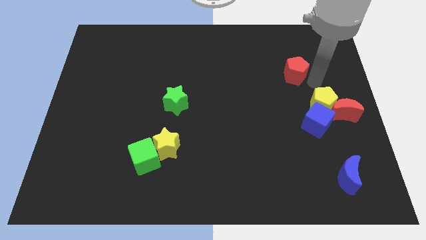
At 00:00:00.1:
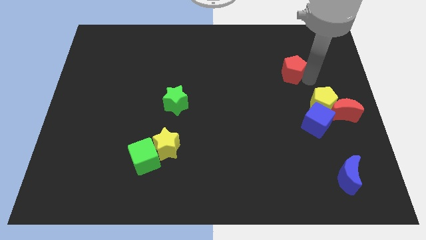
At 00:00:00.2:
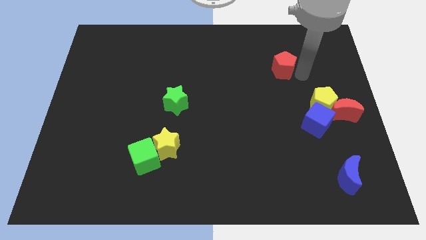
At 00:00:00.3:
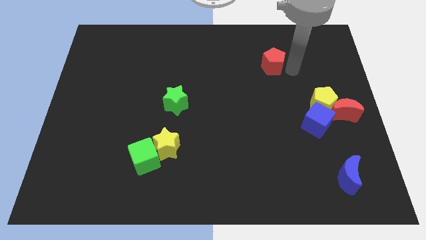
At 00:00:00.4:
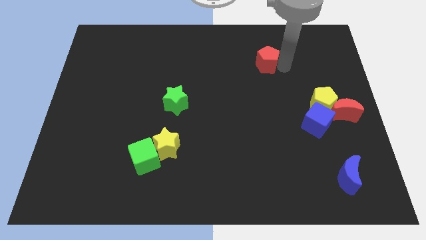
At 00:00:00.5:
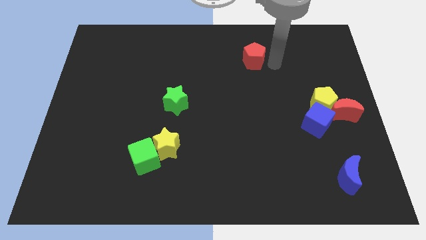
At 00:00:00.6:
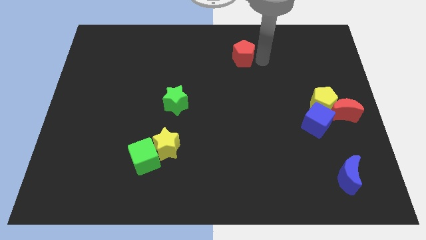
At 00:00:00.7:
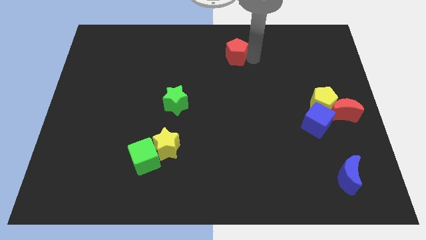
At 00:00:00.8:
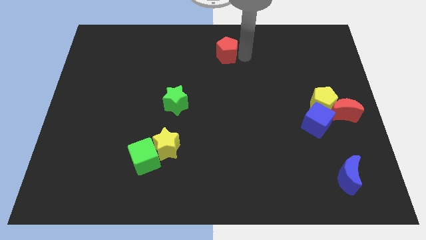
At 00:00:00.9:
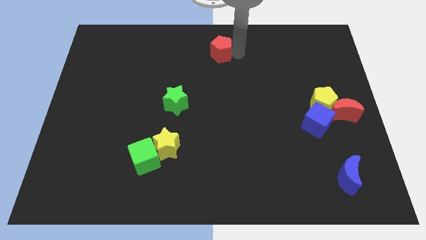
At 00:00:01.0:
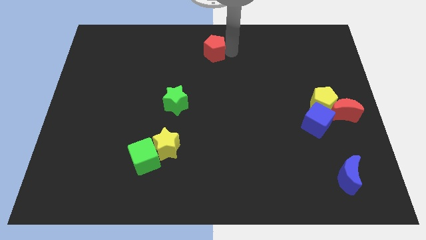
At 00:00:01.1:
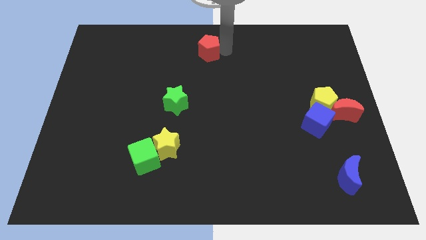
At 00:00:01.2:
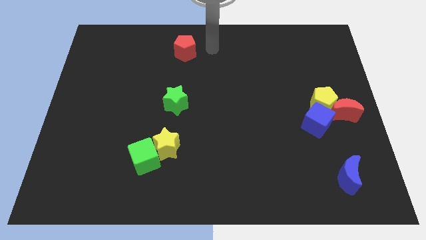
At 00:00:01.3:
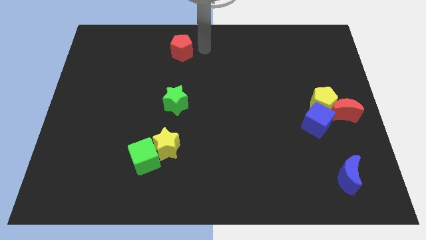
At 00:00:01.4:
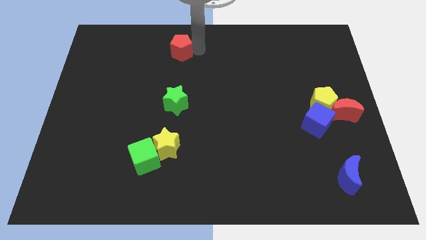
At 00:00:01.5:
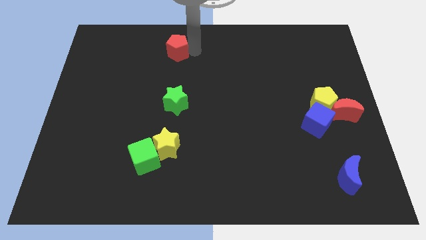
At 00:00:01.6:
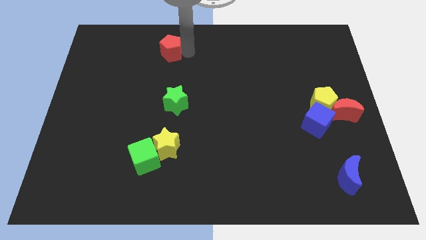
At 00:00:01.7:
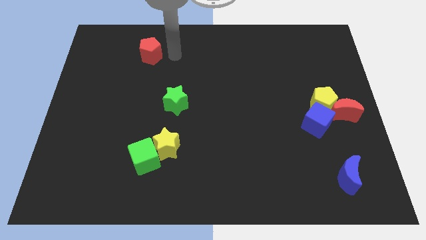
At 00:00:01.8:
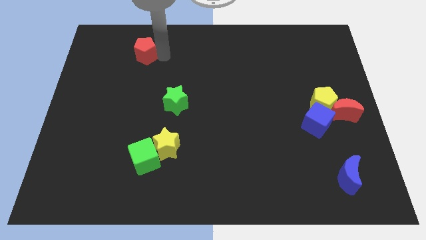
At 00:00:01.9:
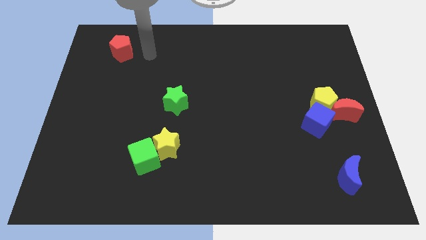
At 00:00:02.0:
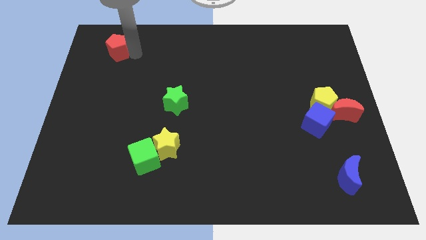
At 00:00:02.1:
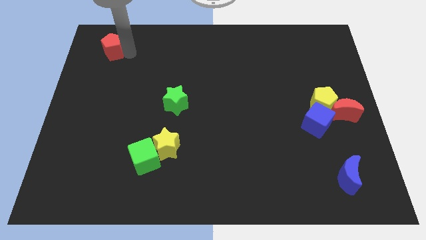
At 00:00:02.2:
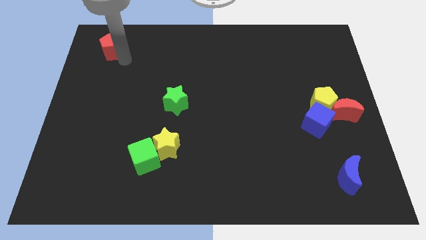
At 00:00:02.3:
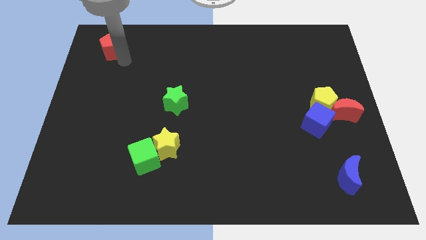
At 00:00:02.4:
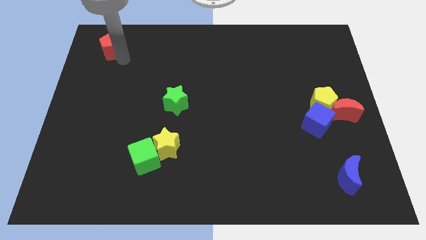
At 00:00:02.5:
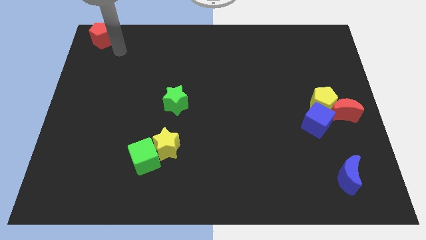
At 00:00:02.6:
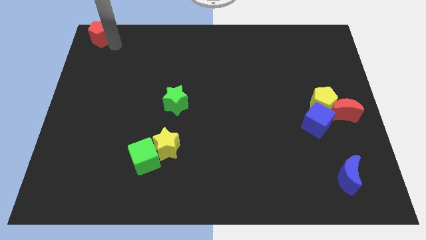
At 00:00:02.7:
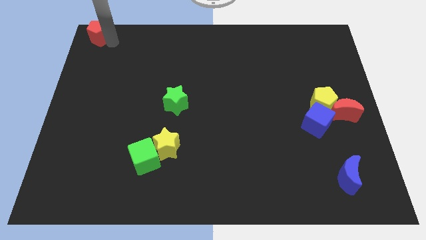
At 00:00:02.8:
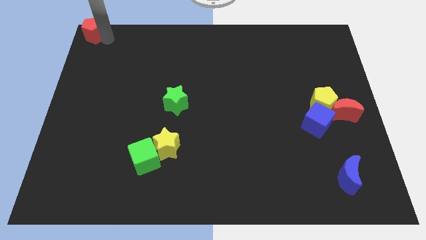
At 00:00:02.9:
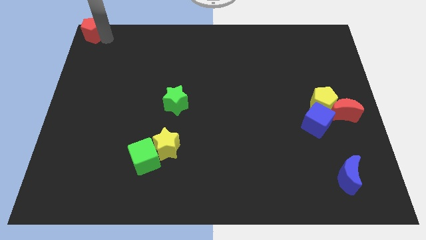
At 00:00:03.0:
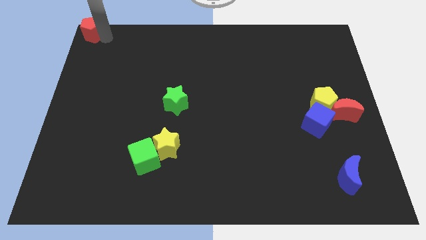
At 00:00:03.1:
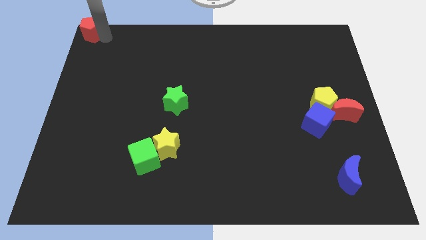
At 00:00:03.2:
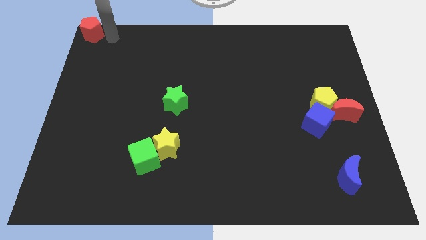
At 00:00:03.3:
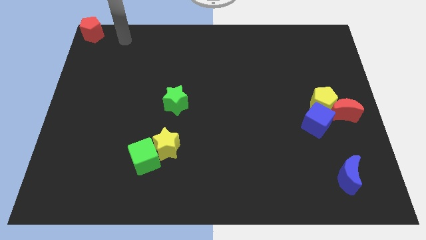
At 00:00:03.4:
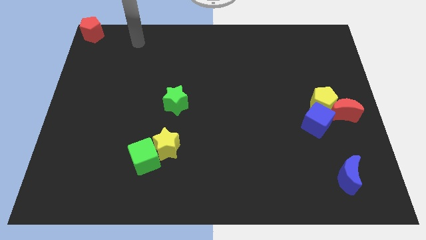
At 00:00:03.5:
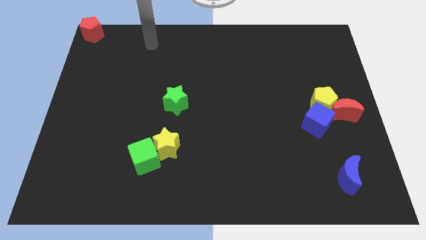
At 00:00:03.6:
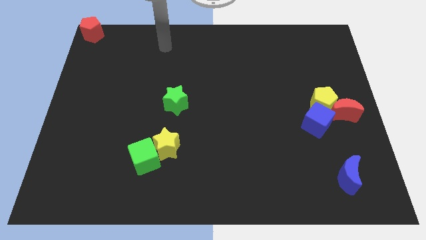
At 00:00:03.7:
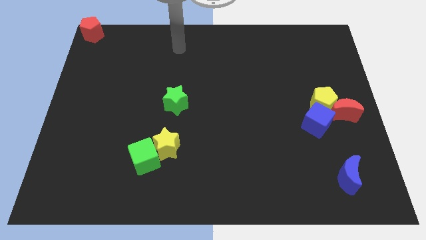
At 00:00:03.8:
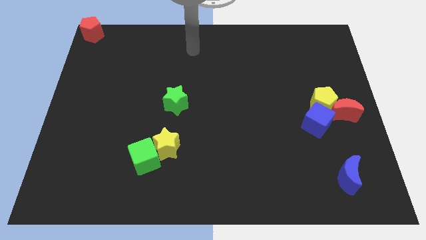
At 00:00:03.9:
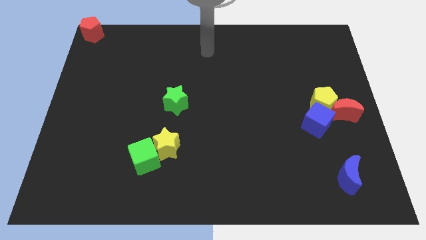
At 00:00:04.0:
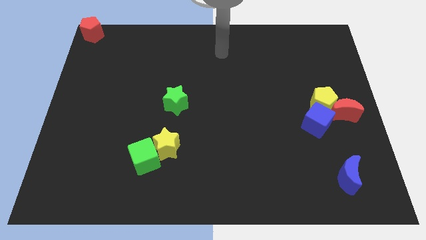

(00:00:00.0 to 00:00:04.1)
push red pentagon to the top left

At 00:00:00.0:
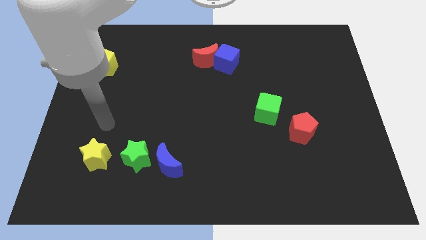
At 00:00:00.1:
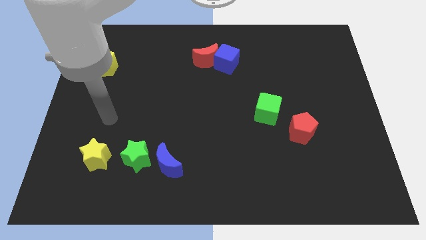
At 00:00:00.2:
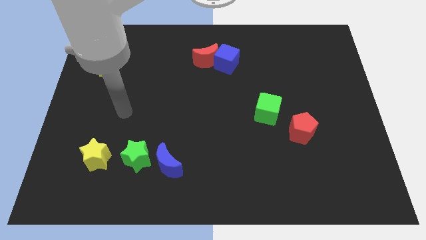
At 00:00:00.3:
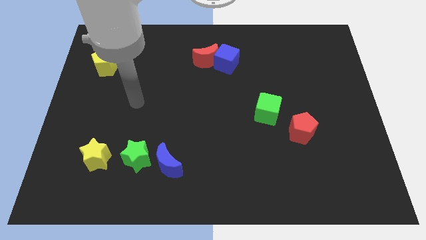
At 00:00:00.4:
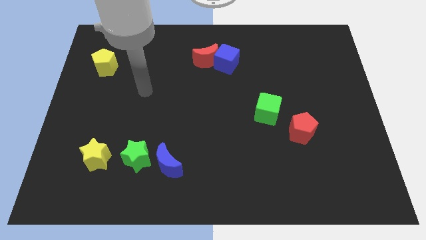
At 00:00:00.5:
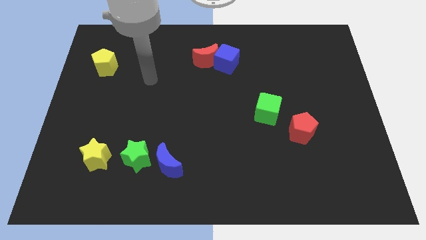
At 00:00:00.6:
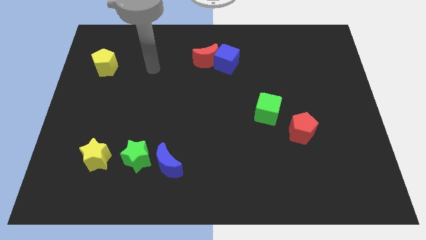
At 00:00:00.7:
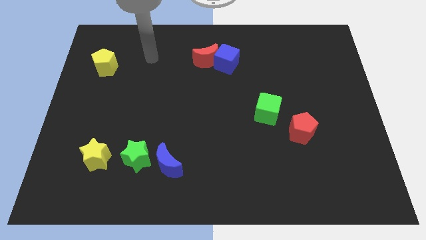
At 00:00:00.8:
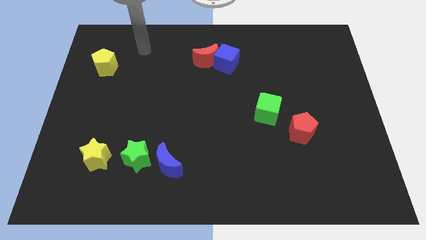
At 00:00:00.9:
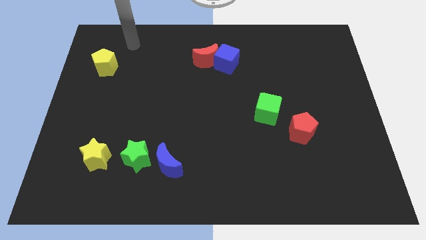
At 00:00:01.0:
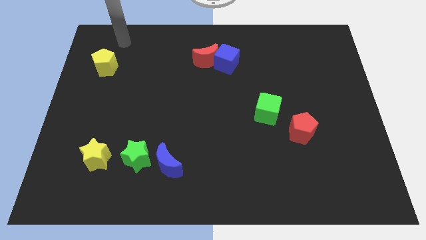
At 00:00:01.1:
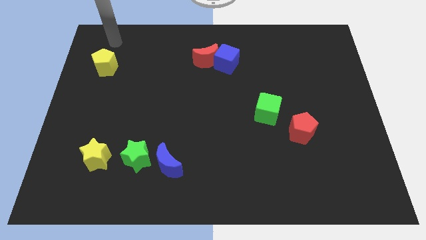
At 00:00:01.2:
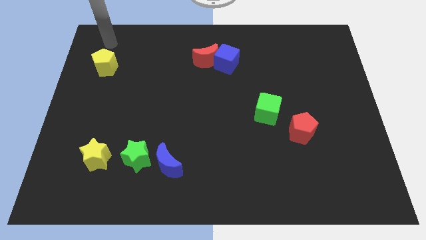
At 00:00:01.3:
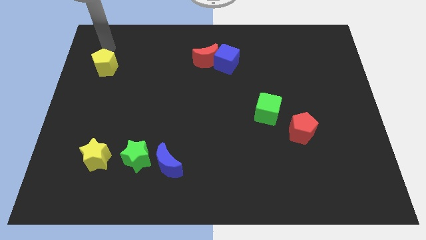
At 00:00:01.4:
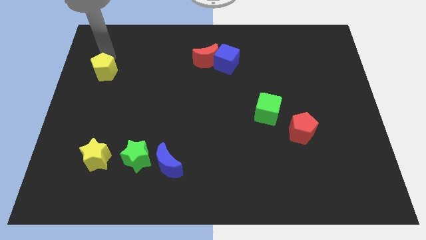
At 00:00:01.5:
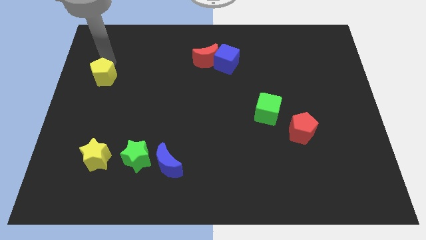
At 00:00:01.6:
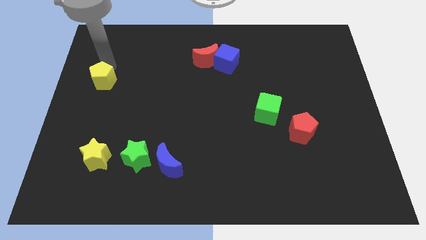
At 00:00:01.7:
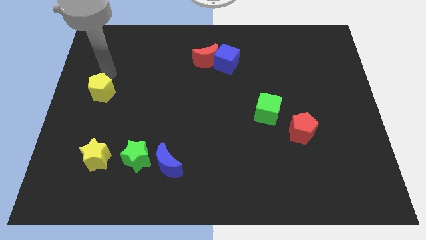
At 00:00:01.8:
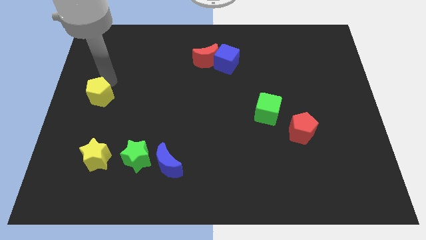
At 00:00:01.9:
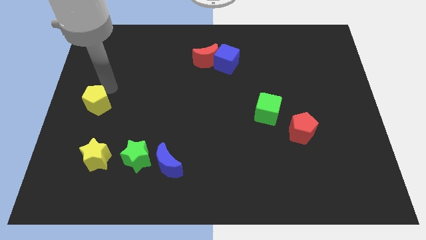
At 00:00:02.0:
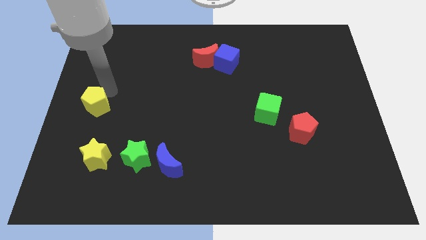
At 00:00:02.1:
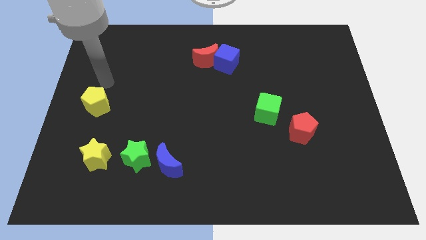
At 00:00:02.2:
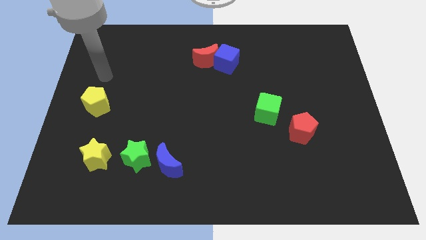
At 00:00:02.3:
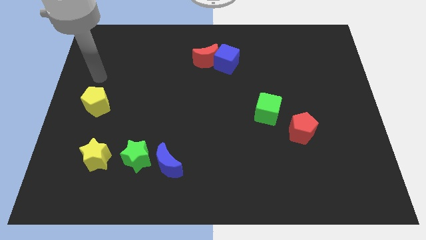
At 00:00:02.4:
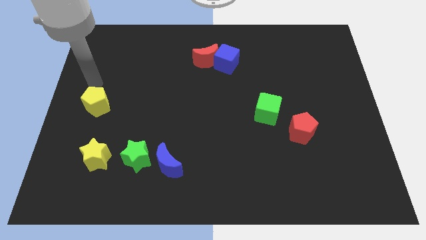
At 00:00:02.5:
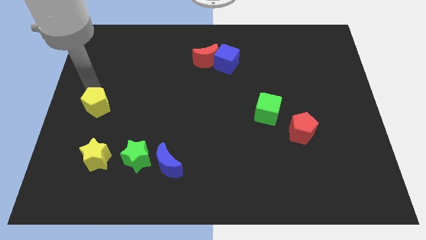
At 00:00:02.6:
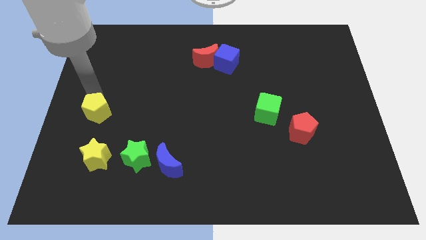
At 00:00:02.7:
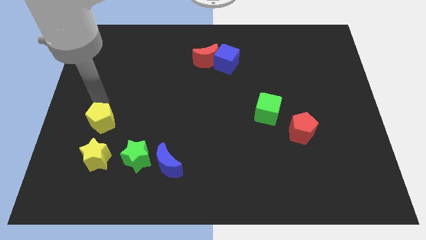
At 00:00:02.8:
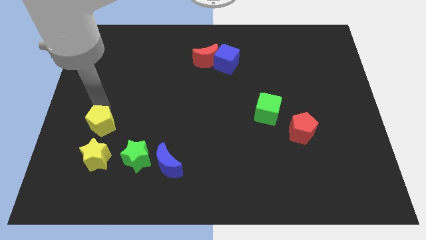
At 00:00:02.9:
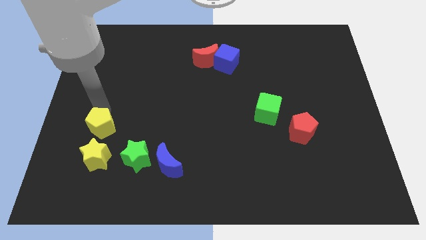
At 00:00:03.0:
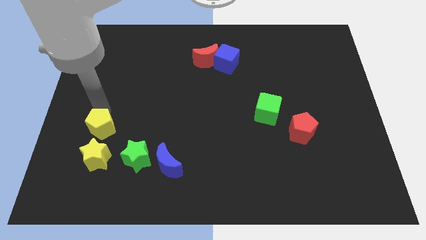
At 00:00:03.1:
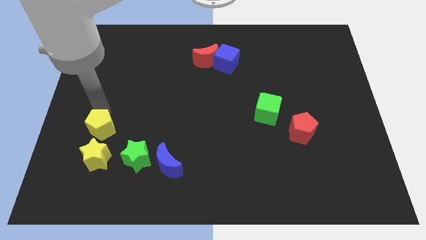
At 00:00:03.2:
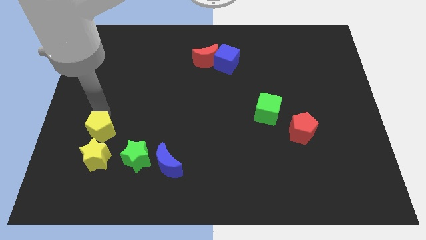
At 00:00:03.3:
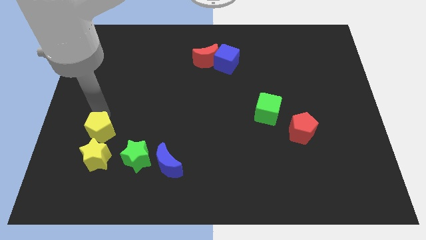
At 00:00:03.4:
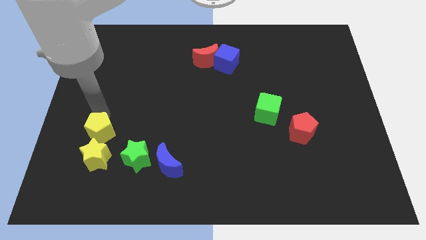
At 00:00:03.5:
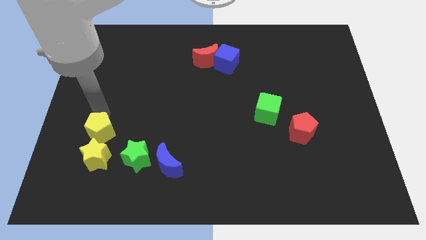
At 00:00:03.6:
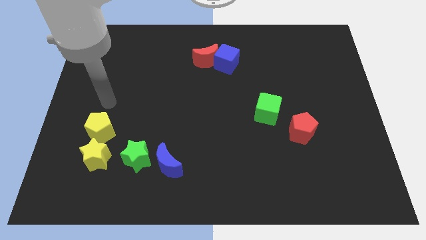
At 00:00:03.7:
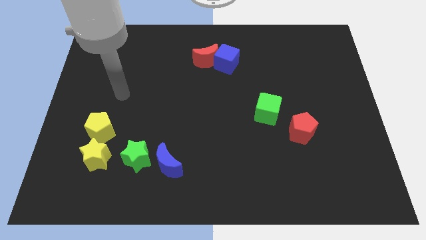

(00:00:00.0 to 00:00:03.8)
place the yellow pentagon to the top of yellow star

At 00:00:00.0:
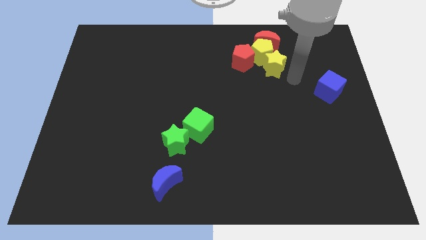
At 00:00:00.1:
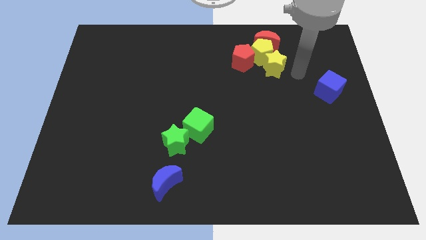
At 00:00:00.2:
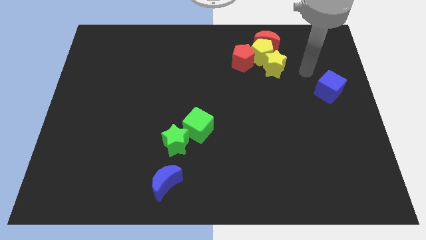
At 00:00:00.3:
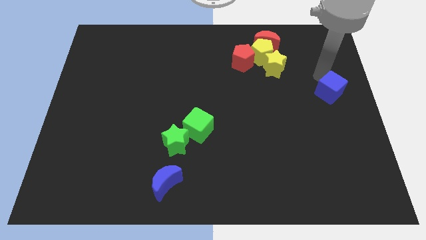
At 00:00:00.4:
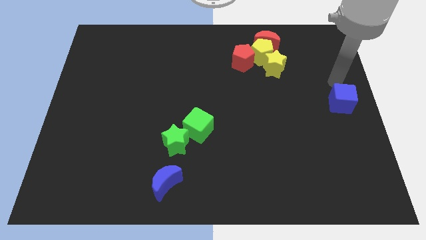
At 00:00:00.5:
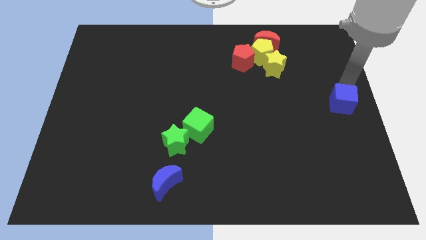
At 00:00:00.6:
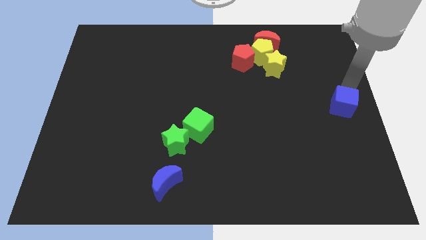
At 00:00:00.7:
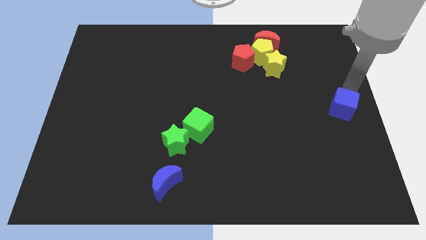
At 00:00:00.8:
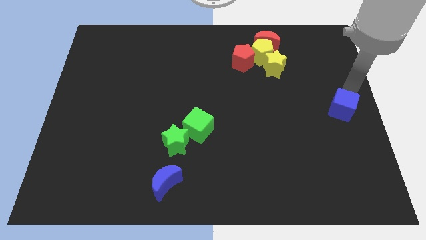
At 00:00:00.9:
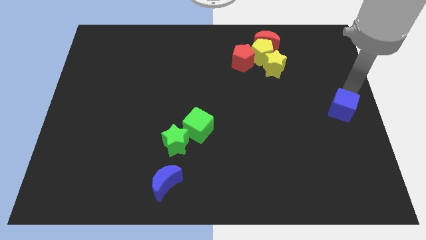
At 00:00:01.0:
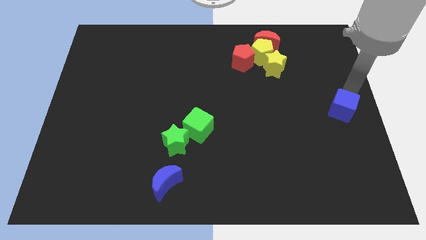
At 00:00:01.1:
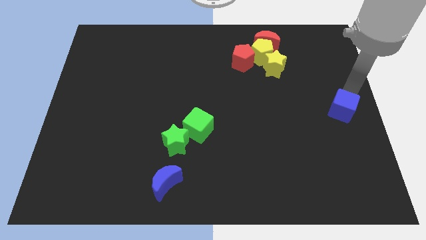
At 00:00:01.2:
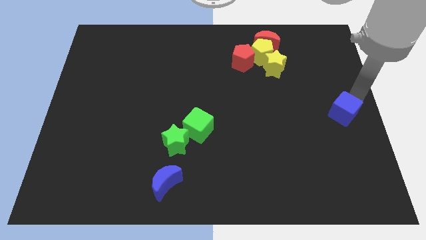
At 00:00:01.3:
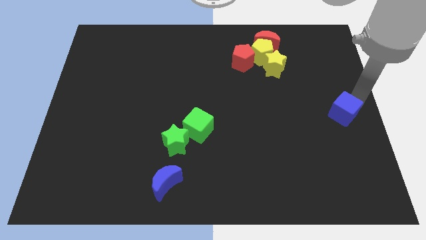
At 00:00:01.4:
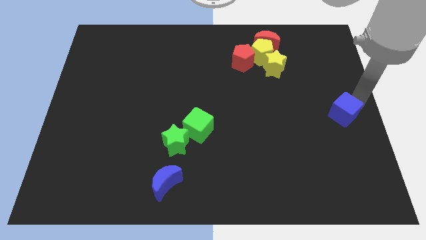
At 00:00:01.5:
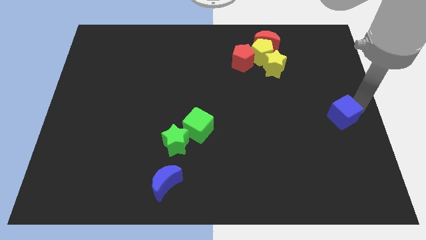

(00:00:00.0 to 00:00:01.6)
push blue cube slightly towards down
